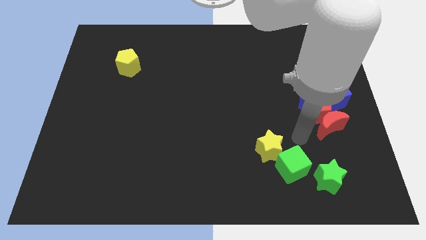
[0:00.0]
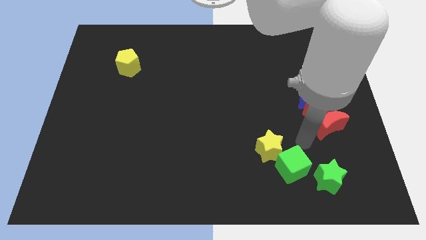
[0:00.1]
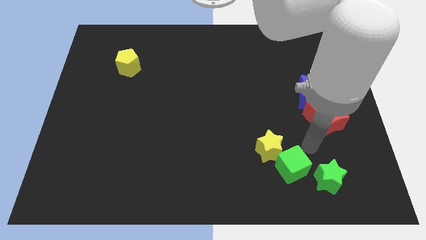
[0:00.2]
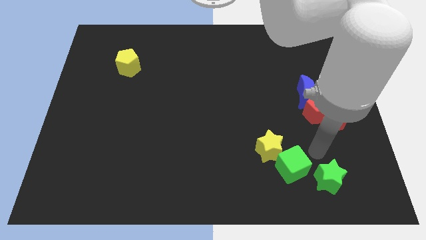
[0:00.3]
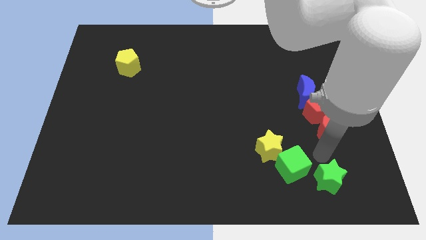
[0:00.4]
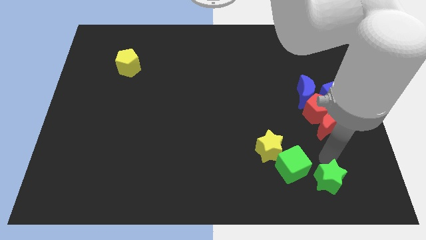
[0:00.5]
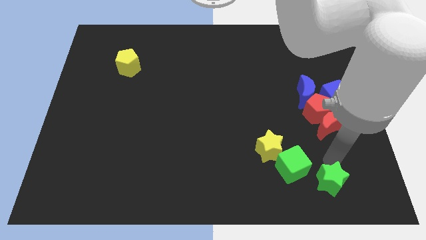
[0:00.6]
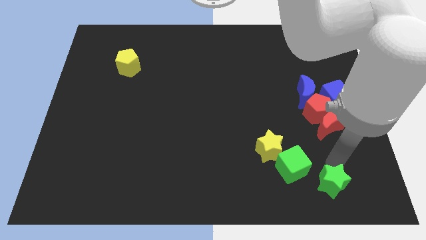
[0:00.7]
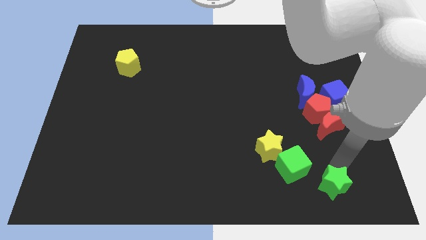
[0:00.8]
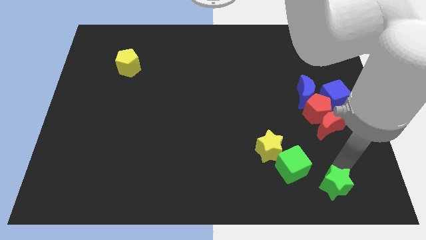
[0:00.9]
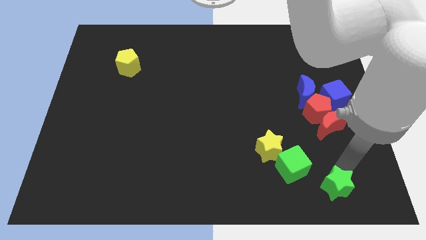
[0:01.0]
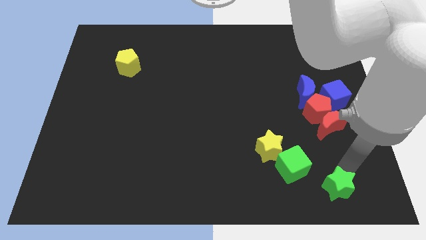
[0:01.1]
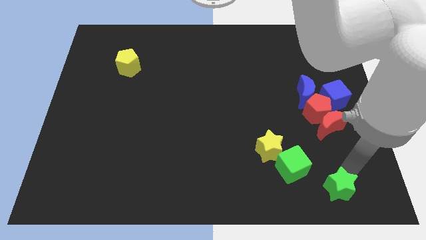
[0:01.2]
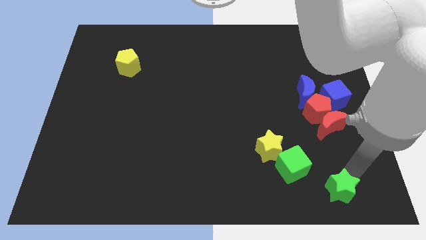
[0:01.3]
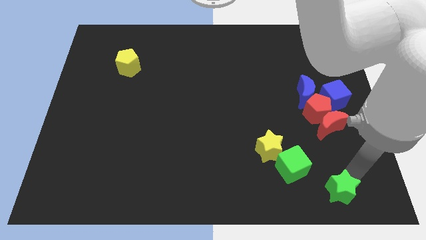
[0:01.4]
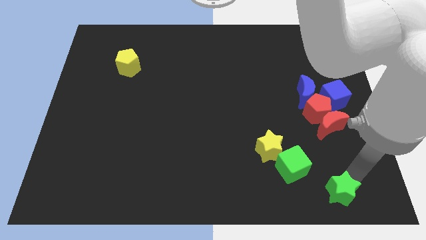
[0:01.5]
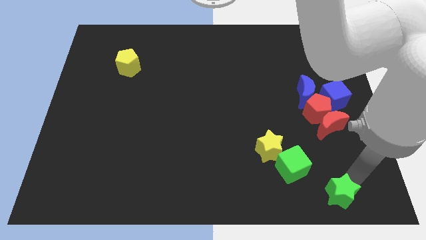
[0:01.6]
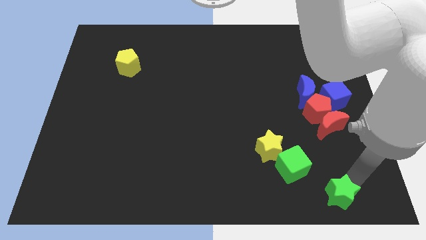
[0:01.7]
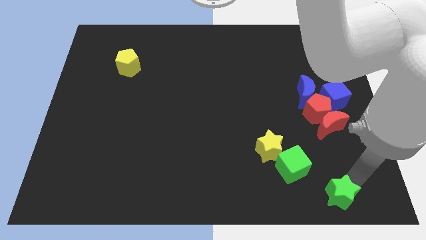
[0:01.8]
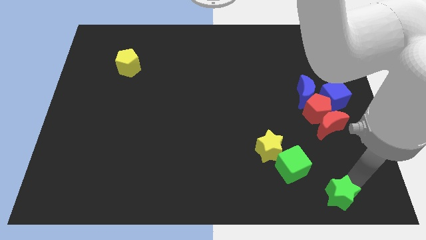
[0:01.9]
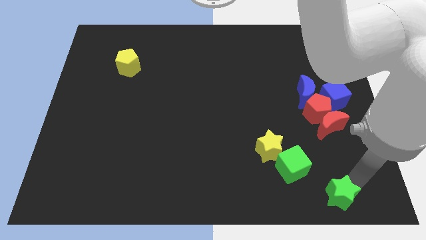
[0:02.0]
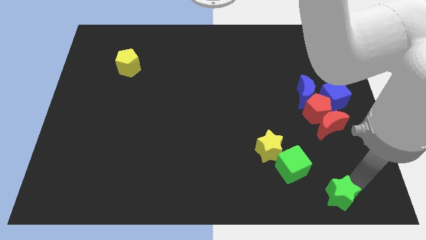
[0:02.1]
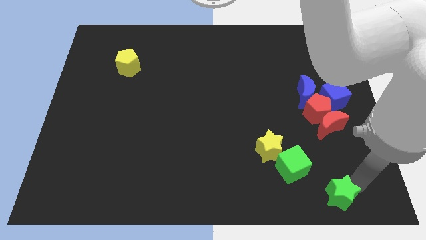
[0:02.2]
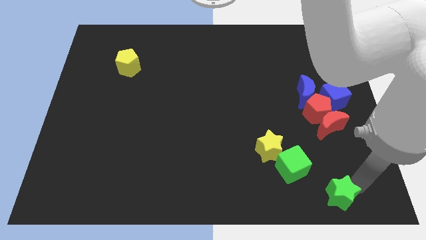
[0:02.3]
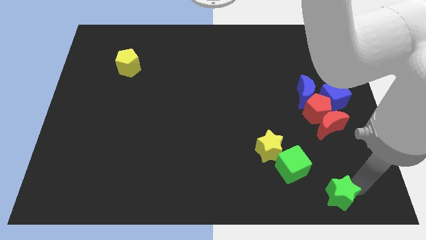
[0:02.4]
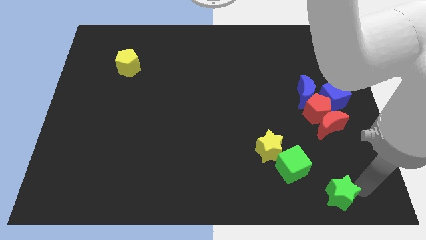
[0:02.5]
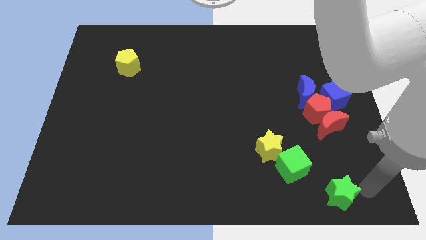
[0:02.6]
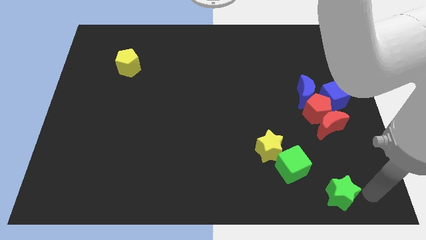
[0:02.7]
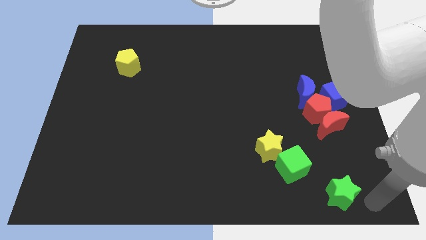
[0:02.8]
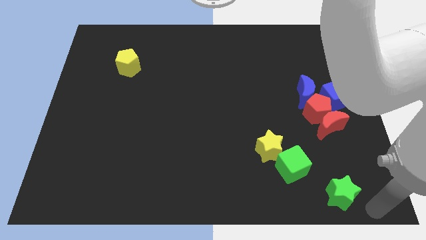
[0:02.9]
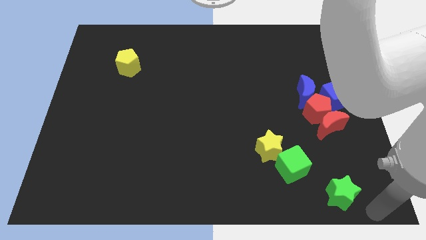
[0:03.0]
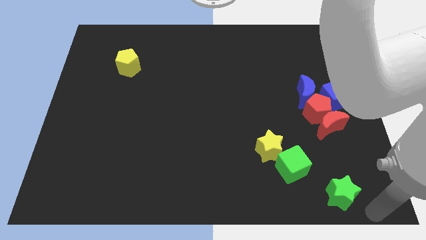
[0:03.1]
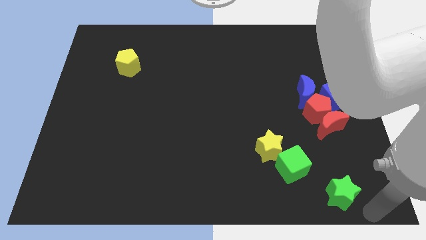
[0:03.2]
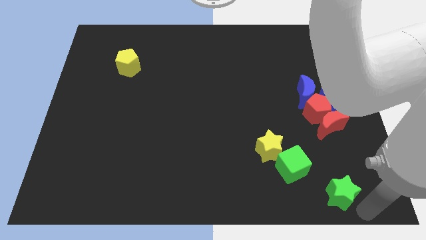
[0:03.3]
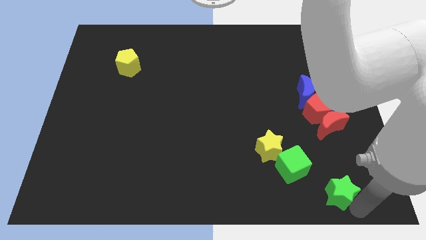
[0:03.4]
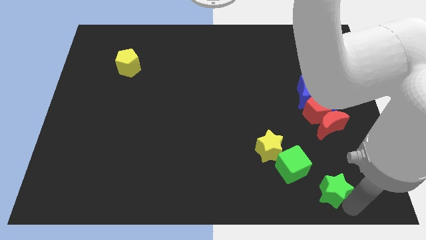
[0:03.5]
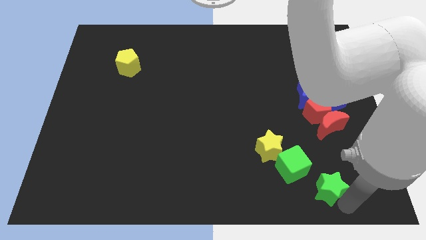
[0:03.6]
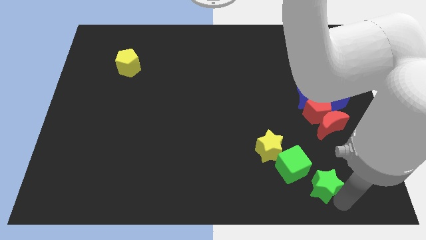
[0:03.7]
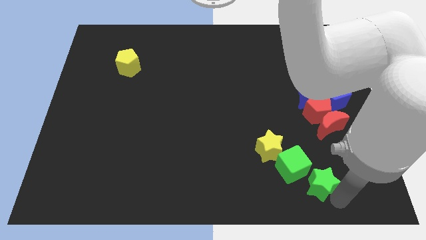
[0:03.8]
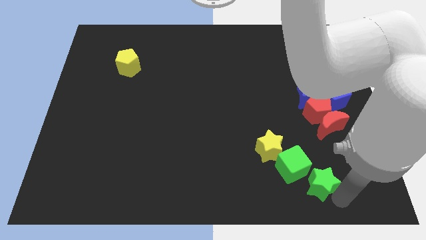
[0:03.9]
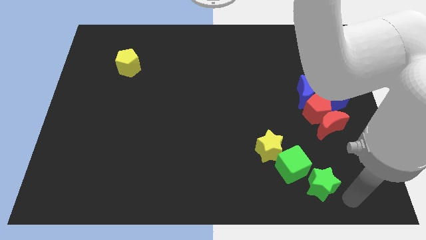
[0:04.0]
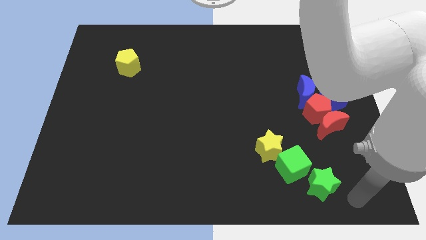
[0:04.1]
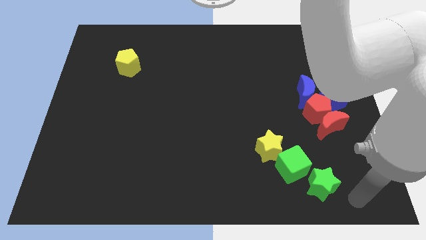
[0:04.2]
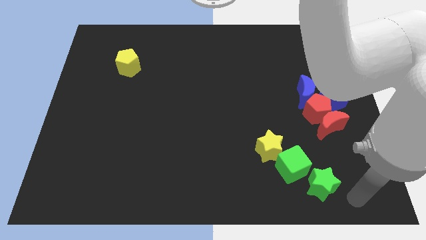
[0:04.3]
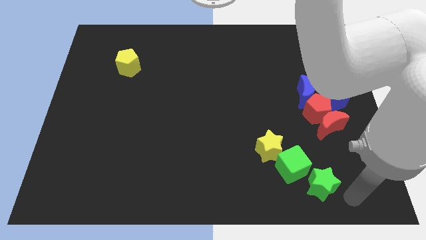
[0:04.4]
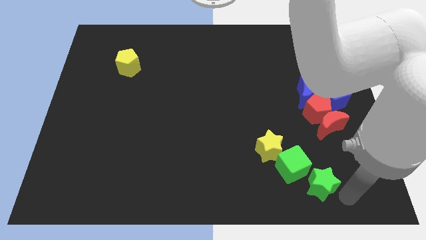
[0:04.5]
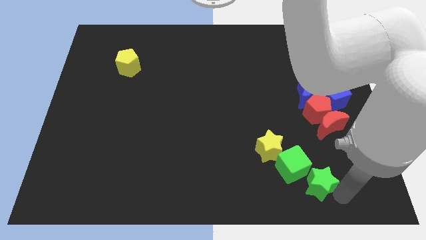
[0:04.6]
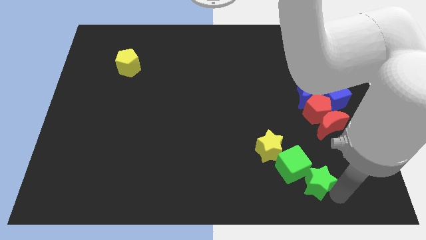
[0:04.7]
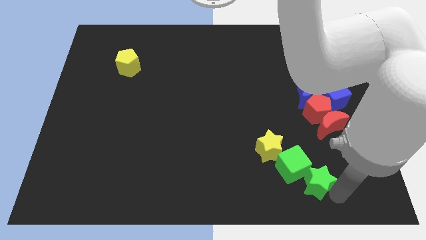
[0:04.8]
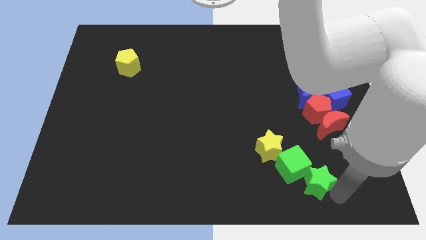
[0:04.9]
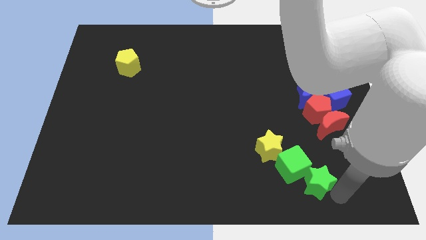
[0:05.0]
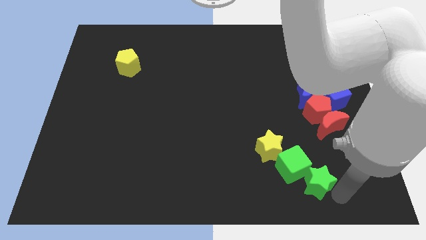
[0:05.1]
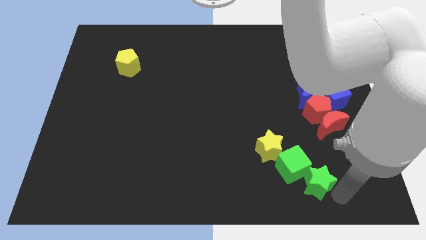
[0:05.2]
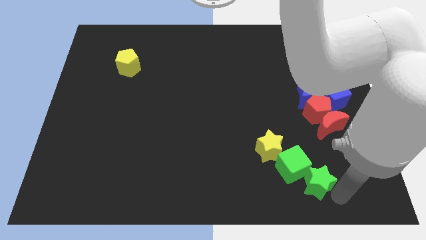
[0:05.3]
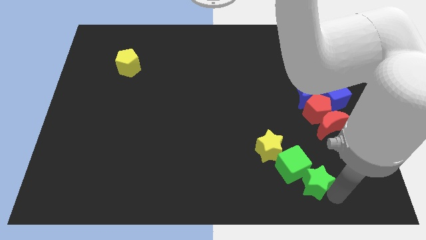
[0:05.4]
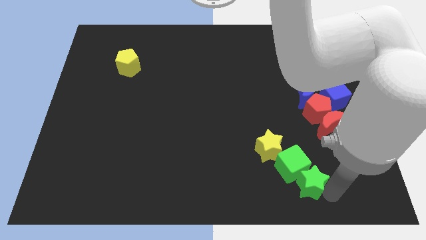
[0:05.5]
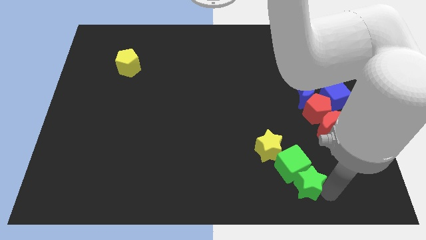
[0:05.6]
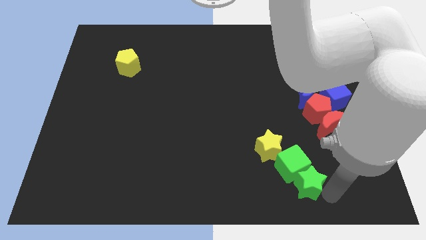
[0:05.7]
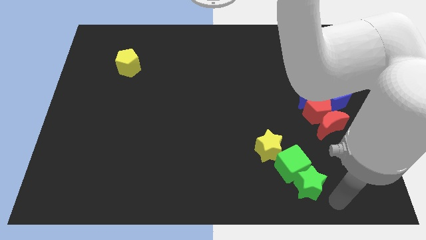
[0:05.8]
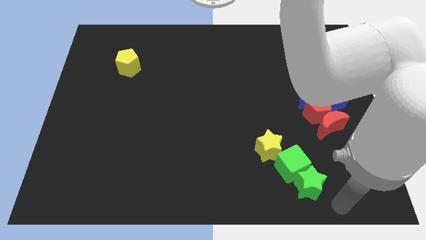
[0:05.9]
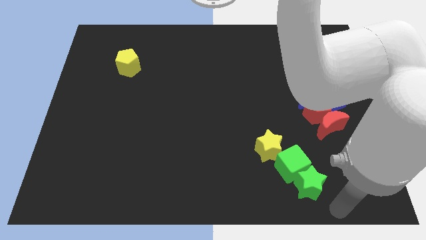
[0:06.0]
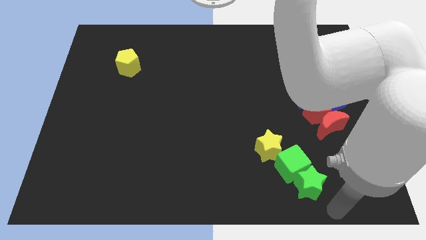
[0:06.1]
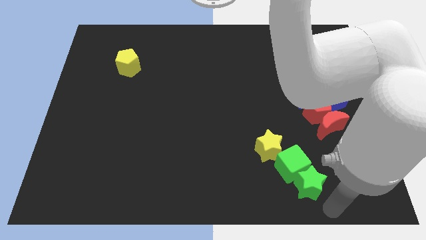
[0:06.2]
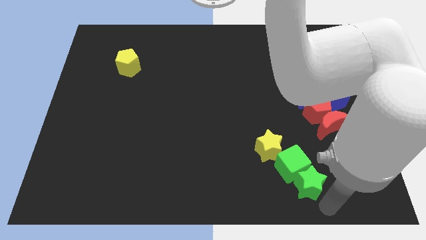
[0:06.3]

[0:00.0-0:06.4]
move green star into the bottom of green cube

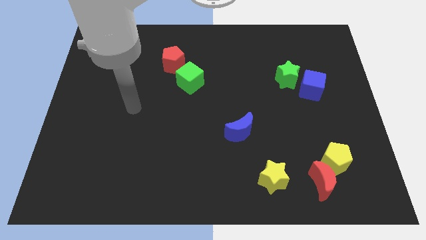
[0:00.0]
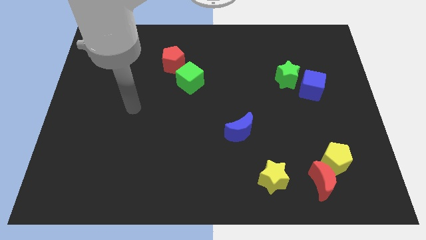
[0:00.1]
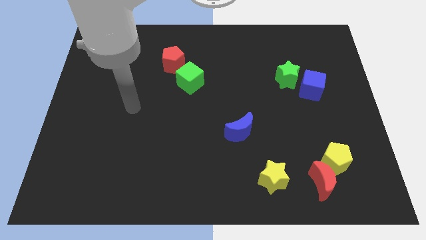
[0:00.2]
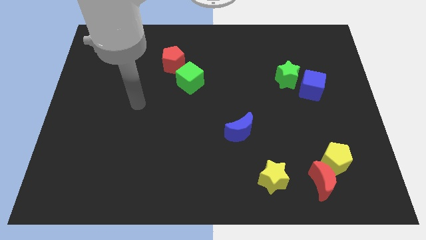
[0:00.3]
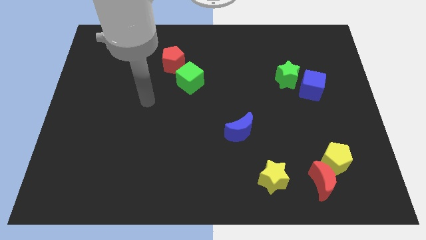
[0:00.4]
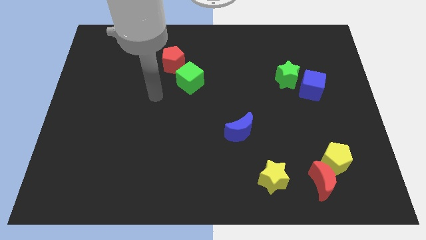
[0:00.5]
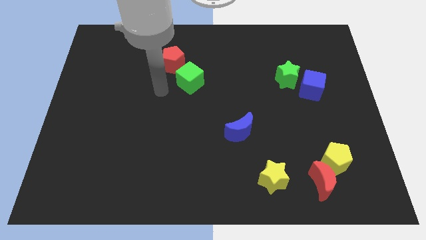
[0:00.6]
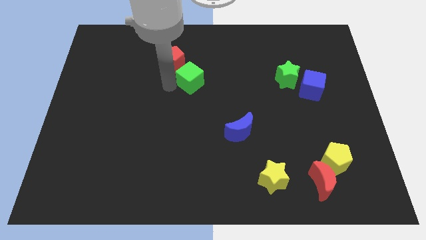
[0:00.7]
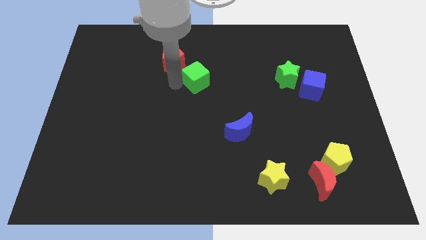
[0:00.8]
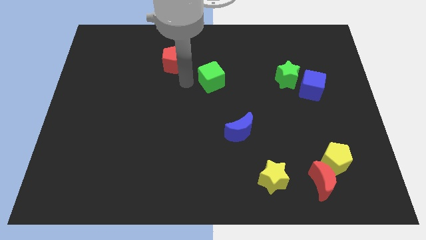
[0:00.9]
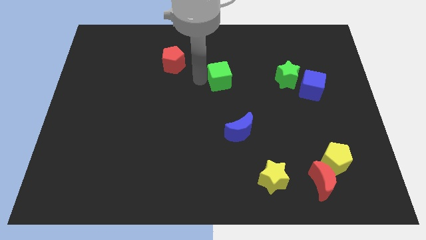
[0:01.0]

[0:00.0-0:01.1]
move the green cube slightly to the right

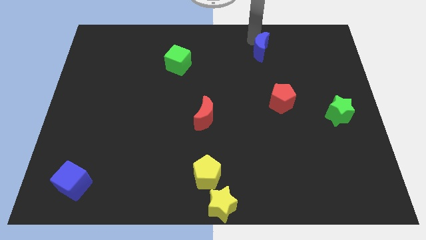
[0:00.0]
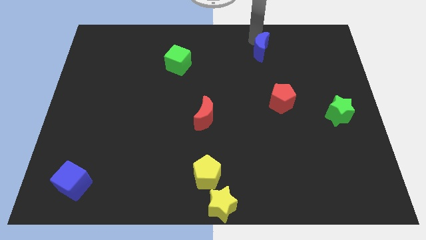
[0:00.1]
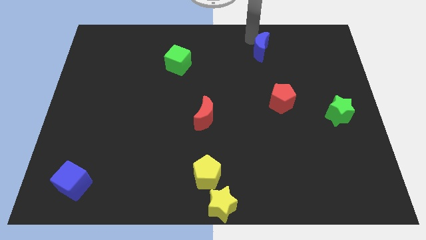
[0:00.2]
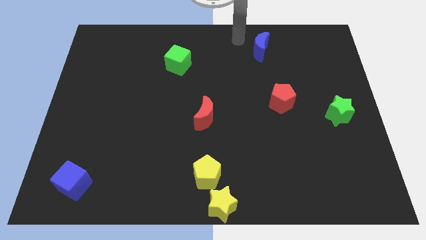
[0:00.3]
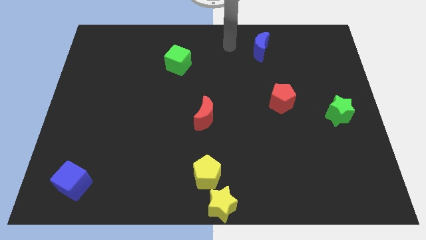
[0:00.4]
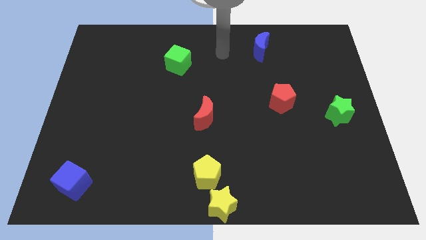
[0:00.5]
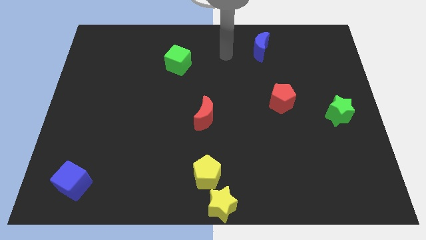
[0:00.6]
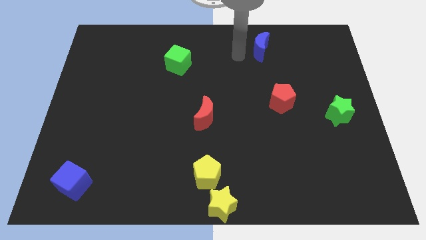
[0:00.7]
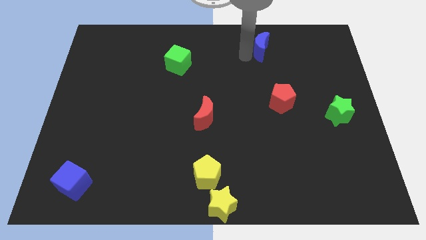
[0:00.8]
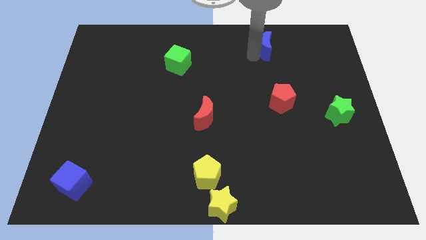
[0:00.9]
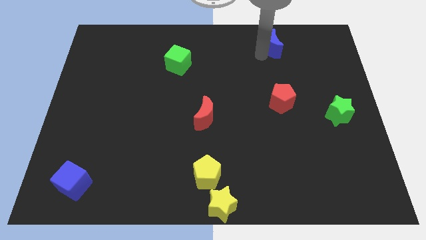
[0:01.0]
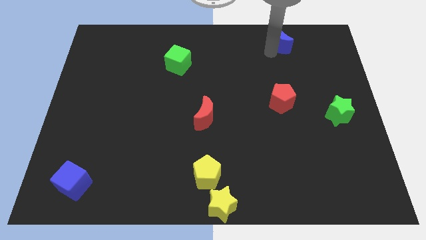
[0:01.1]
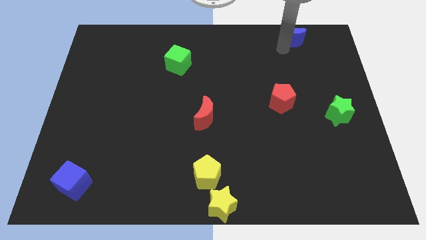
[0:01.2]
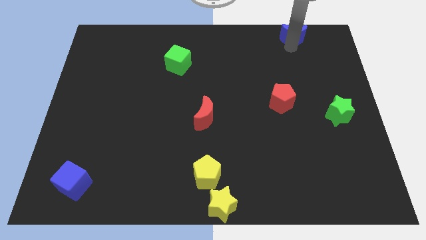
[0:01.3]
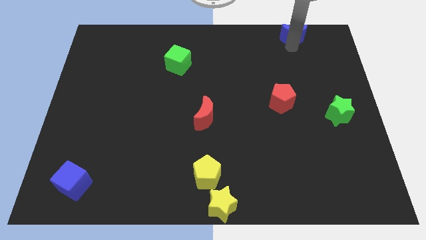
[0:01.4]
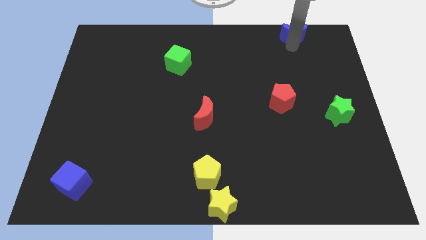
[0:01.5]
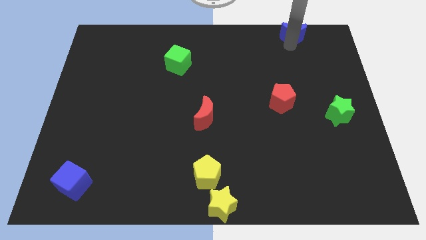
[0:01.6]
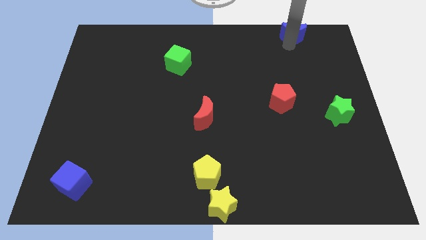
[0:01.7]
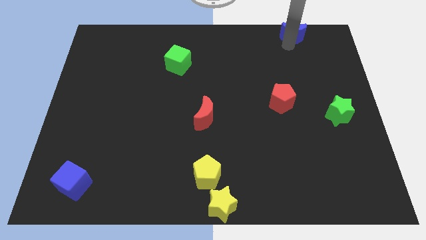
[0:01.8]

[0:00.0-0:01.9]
drag the blue moon to the top right side of the board
